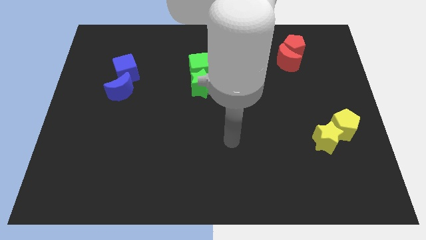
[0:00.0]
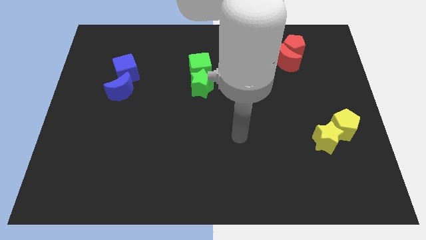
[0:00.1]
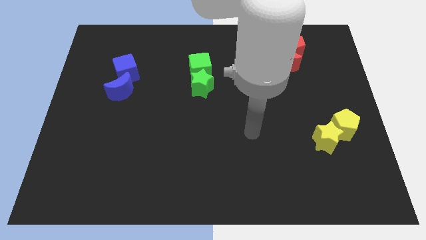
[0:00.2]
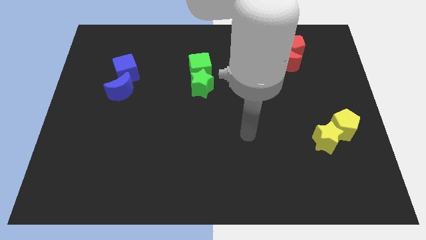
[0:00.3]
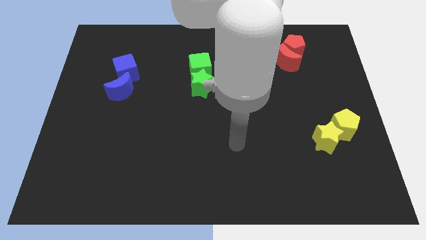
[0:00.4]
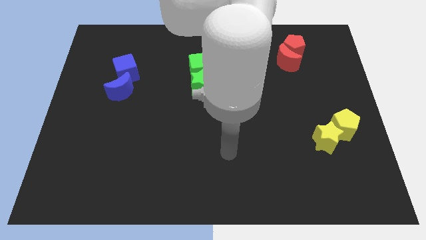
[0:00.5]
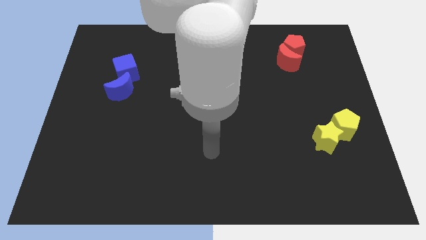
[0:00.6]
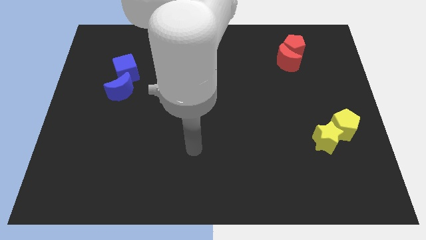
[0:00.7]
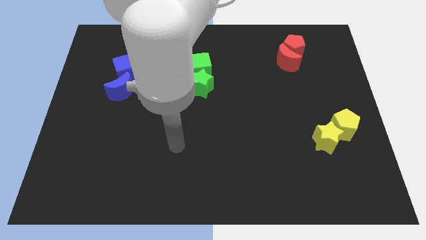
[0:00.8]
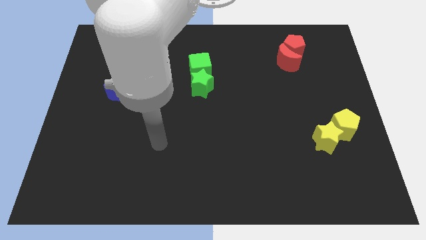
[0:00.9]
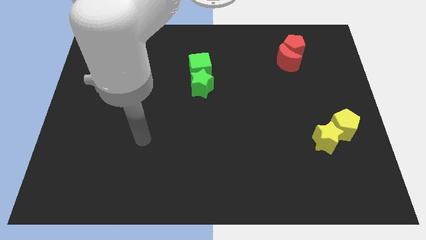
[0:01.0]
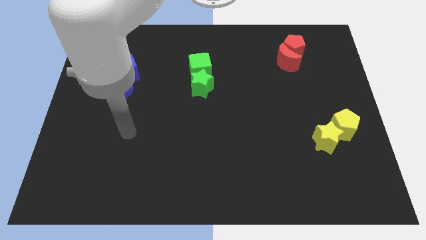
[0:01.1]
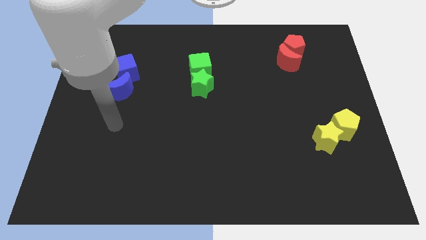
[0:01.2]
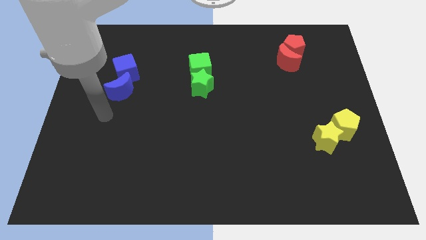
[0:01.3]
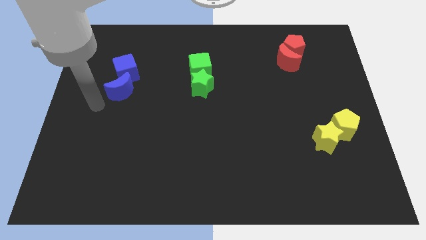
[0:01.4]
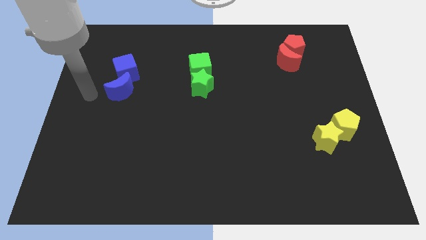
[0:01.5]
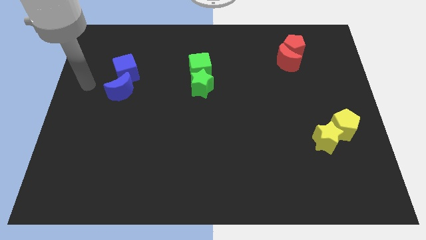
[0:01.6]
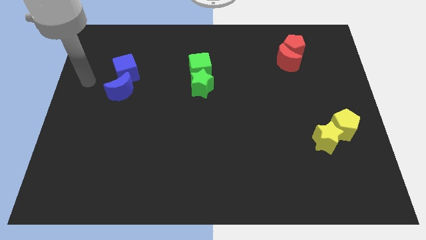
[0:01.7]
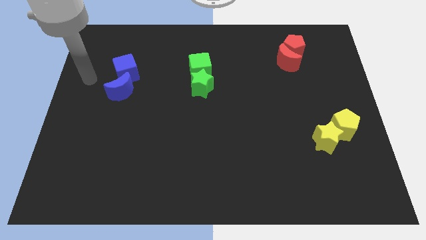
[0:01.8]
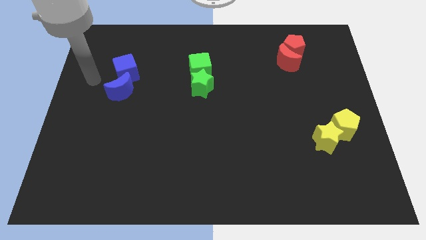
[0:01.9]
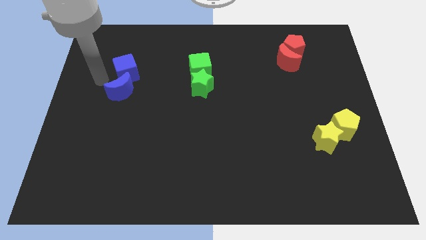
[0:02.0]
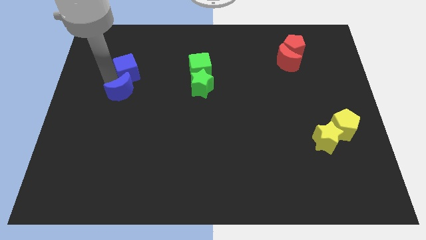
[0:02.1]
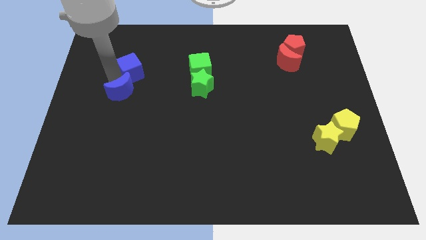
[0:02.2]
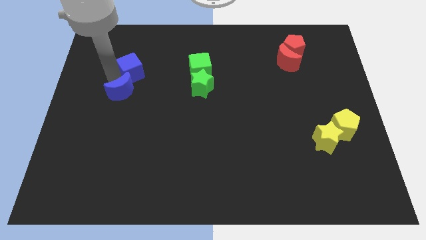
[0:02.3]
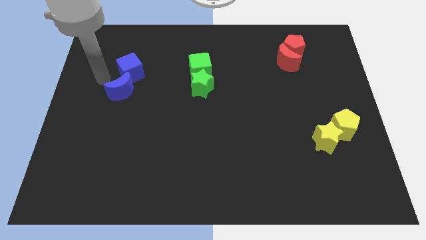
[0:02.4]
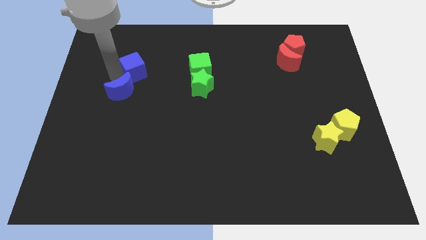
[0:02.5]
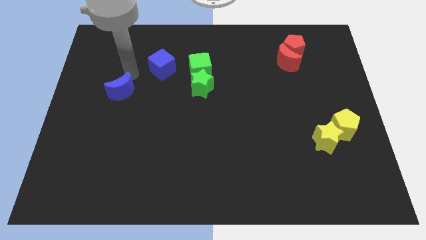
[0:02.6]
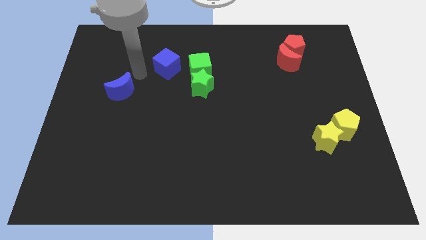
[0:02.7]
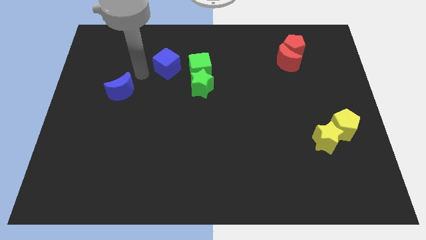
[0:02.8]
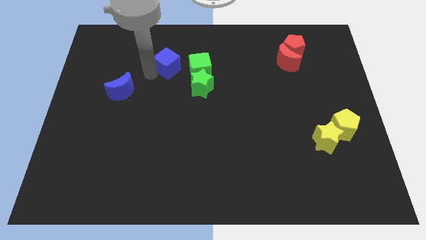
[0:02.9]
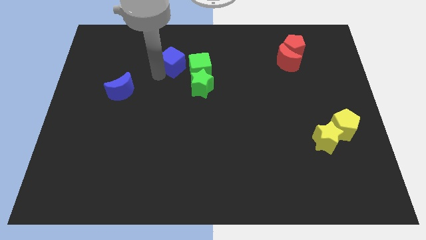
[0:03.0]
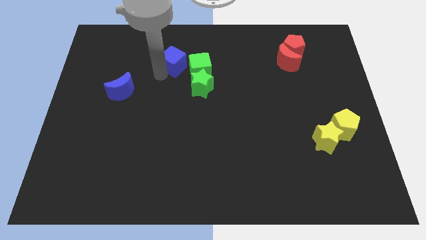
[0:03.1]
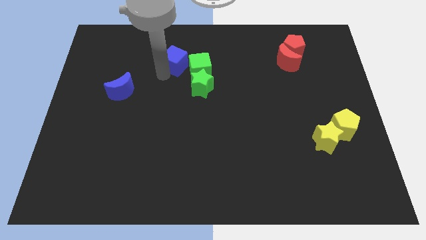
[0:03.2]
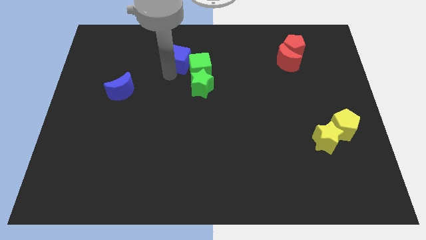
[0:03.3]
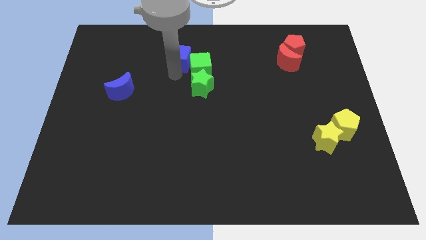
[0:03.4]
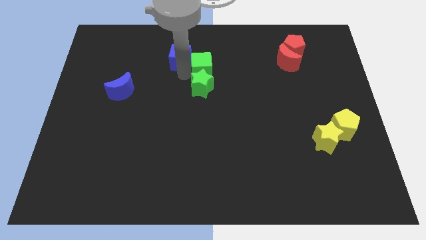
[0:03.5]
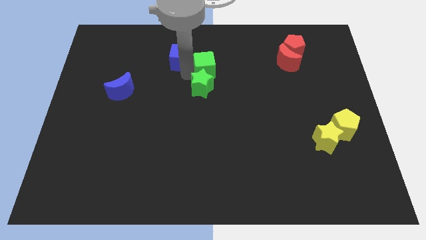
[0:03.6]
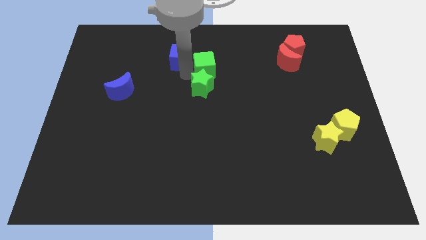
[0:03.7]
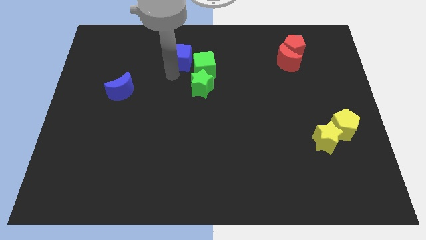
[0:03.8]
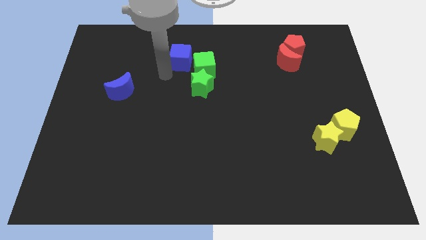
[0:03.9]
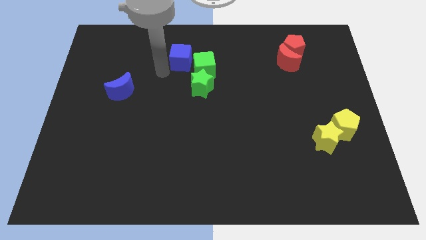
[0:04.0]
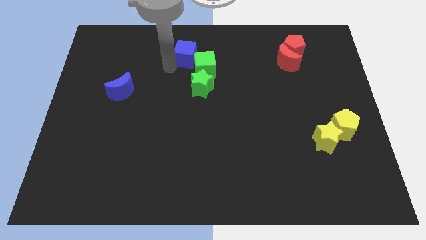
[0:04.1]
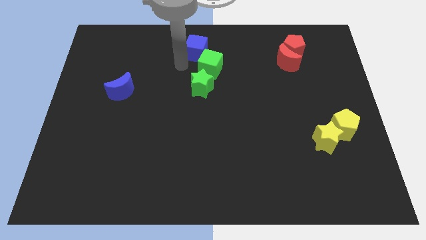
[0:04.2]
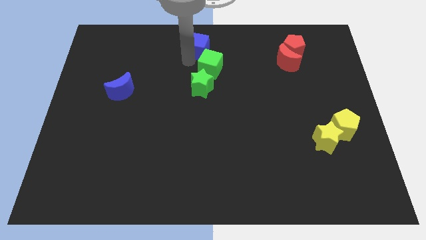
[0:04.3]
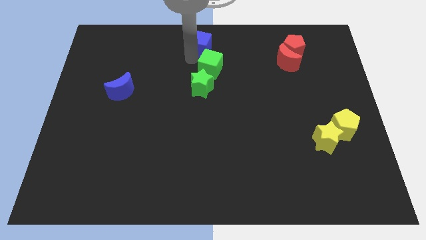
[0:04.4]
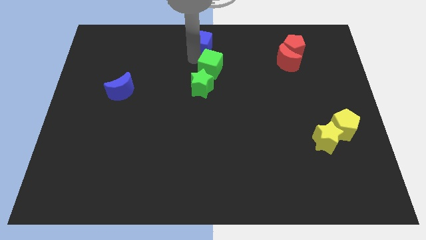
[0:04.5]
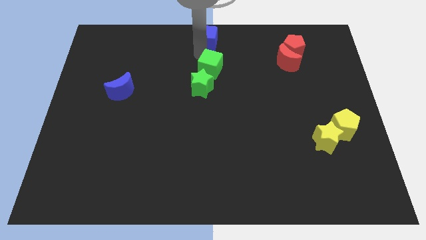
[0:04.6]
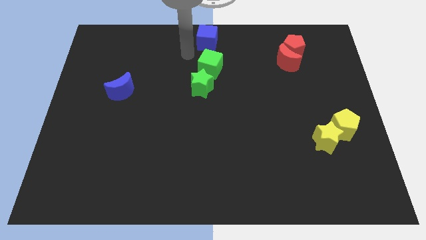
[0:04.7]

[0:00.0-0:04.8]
push the blue cube towards the top center of the board

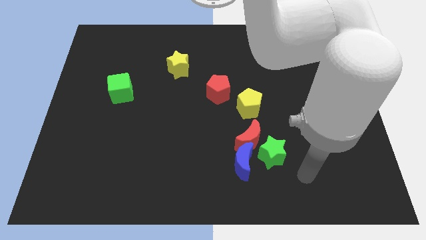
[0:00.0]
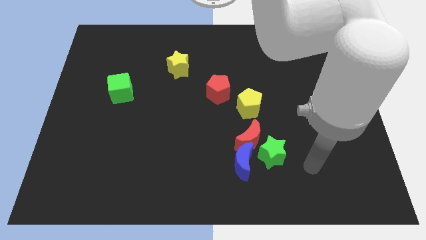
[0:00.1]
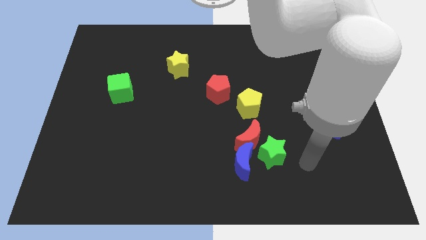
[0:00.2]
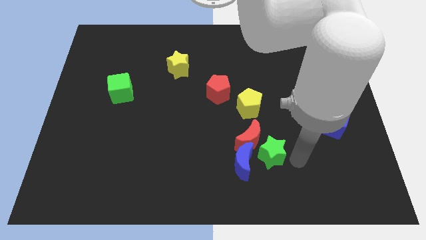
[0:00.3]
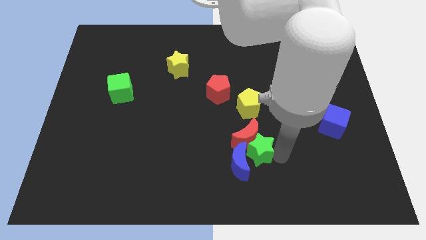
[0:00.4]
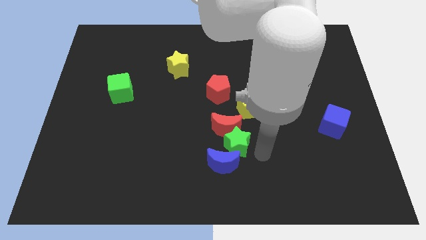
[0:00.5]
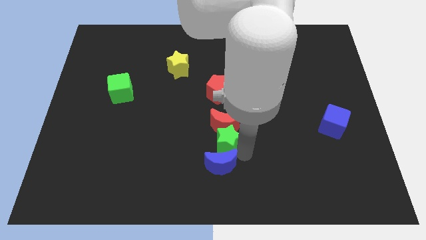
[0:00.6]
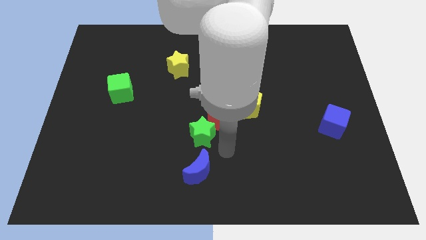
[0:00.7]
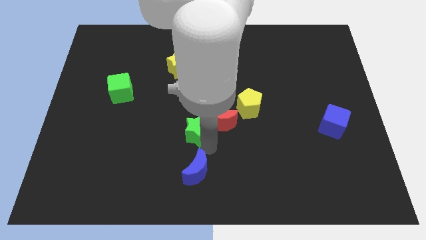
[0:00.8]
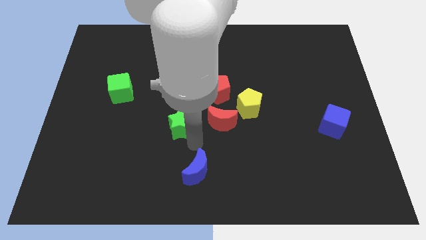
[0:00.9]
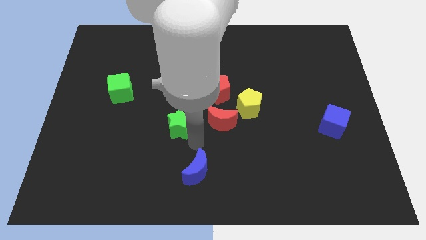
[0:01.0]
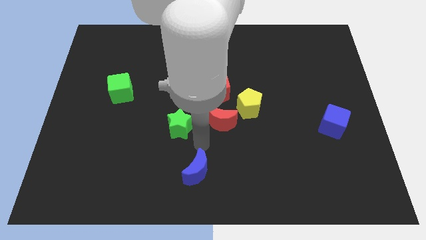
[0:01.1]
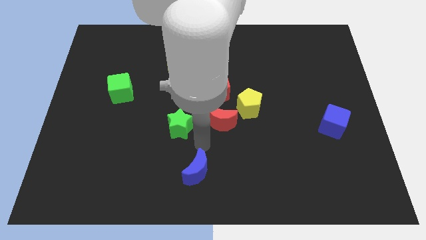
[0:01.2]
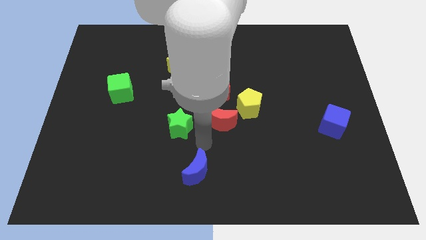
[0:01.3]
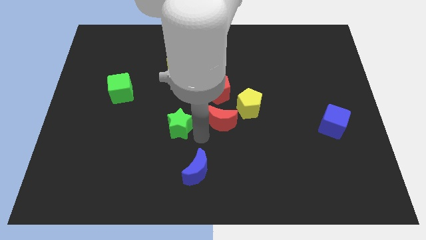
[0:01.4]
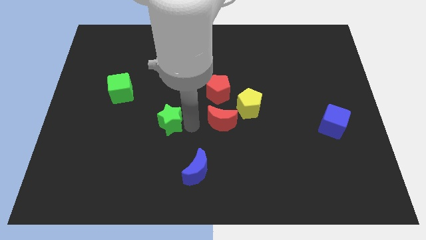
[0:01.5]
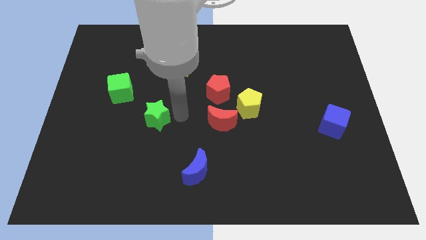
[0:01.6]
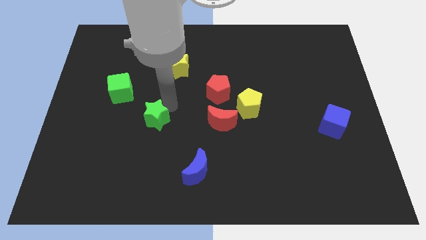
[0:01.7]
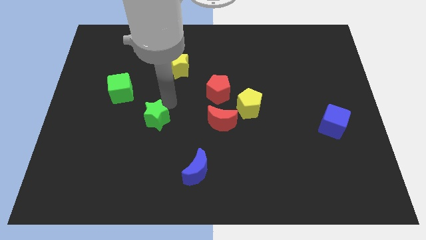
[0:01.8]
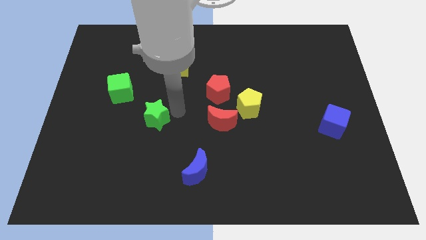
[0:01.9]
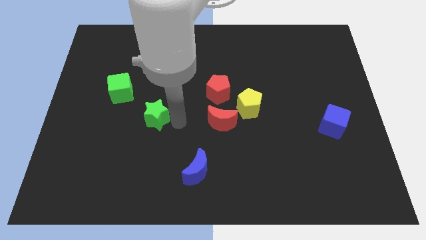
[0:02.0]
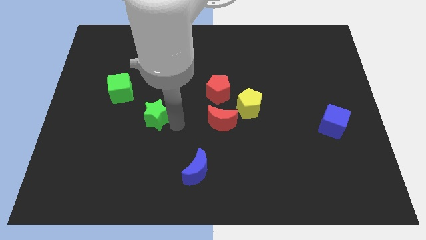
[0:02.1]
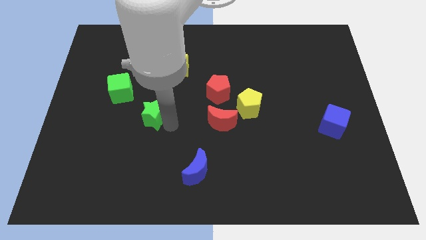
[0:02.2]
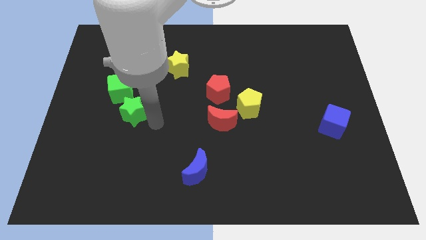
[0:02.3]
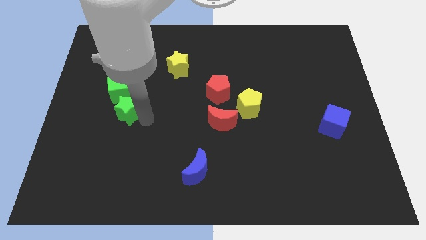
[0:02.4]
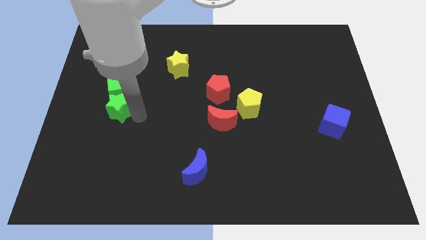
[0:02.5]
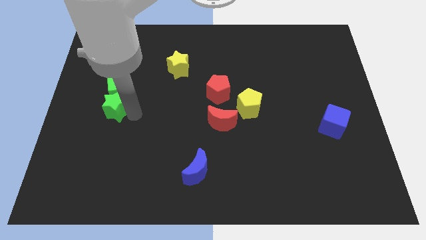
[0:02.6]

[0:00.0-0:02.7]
place green star to the bottom of green cube

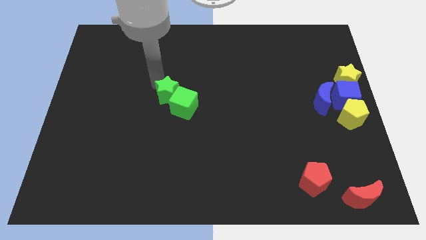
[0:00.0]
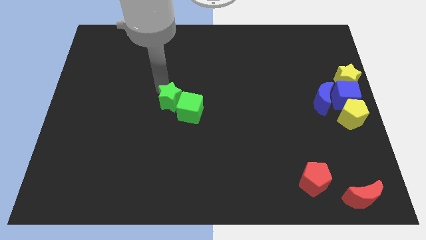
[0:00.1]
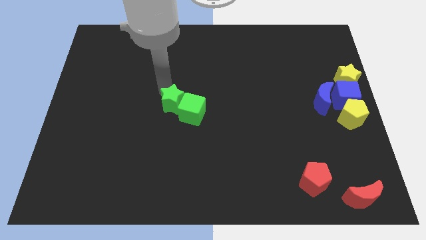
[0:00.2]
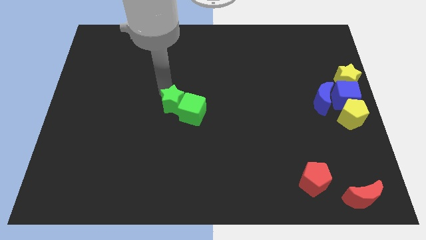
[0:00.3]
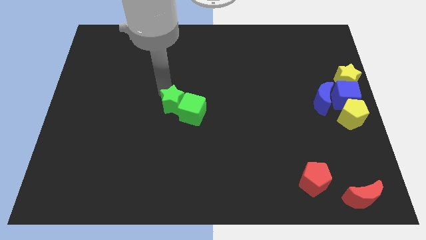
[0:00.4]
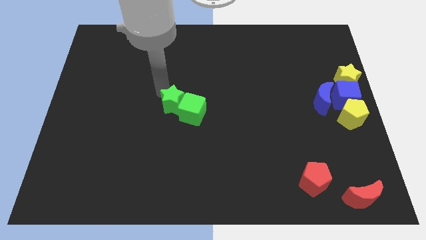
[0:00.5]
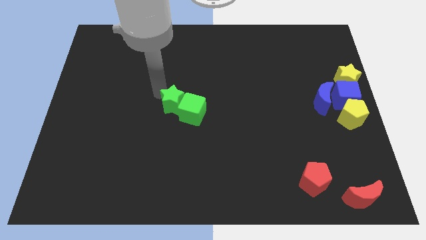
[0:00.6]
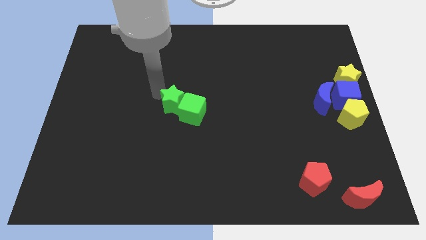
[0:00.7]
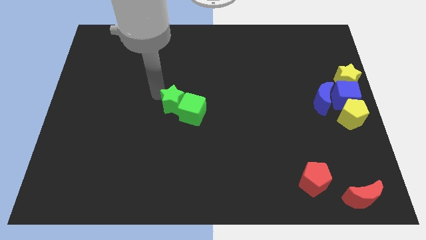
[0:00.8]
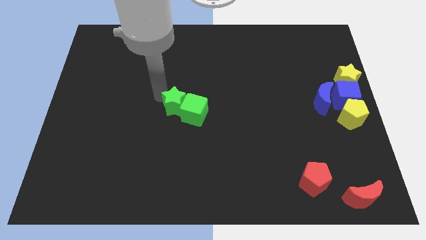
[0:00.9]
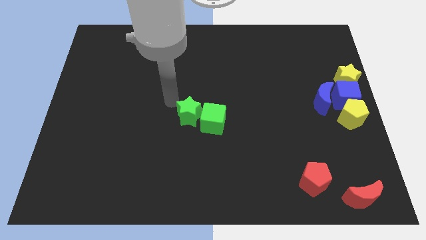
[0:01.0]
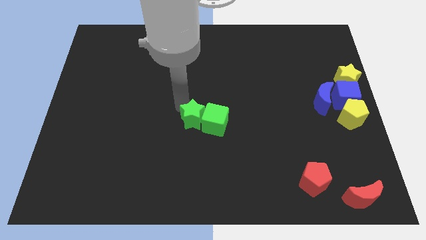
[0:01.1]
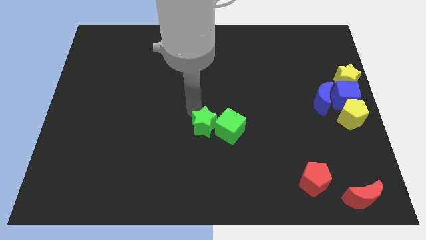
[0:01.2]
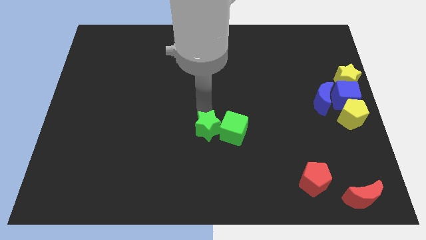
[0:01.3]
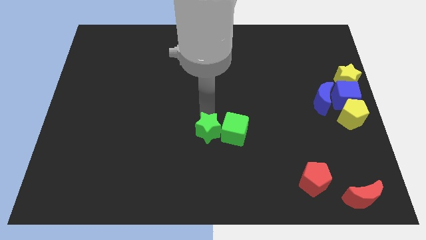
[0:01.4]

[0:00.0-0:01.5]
move the green star into the green cube
